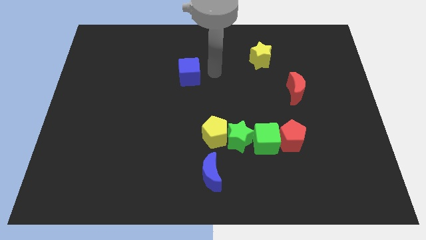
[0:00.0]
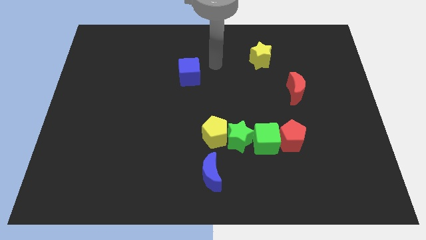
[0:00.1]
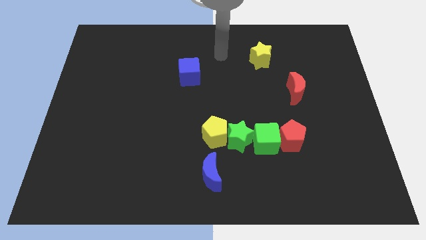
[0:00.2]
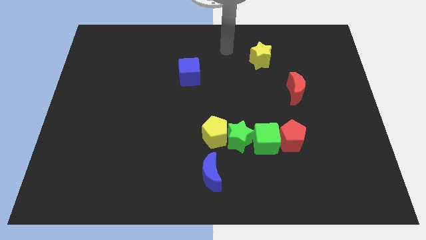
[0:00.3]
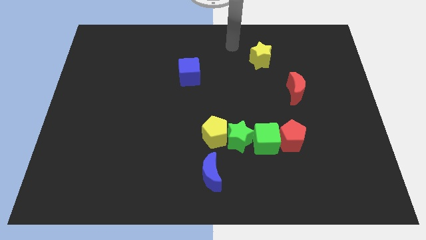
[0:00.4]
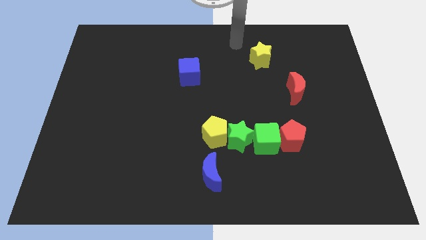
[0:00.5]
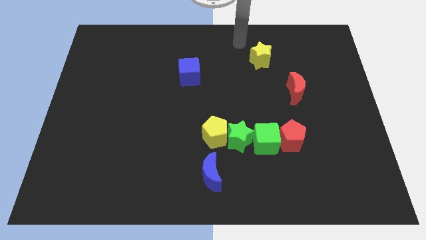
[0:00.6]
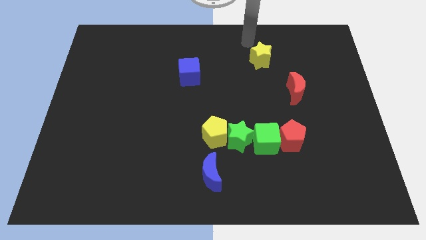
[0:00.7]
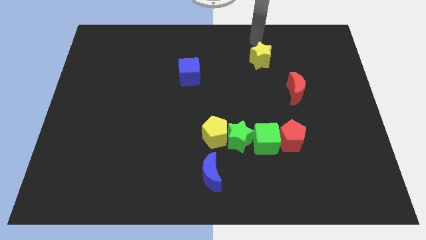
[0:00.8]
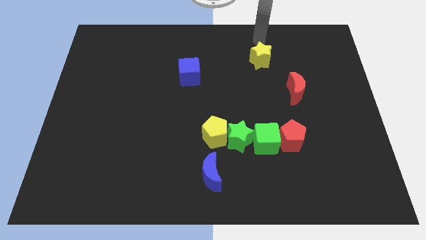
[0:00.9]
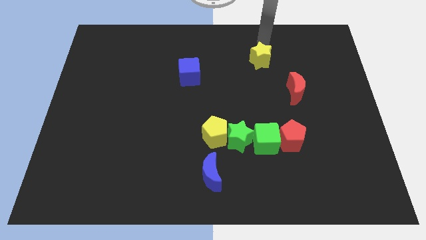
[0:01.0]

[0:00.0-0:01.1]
place the arm above the yellow star

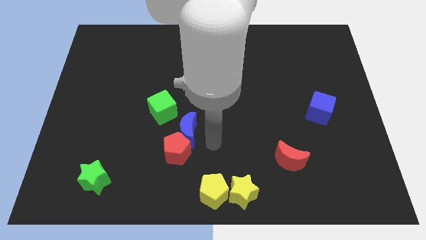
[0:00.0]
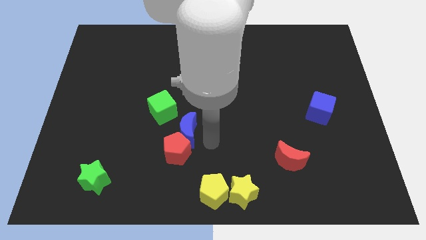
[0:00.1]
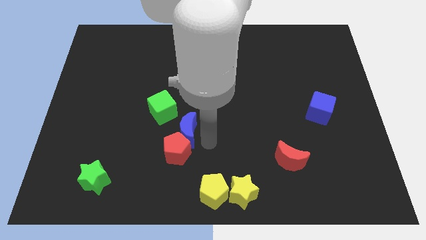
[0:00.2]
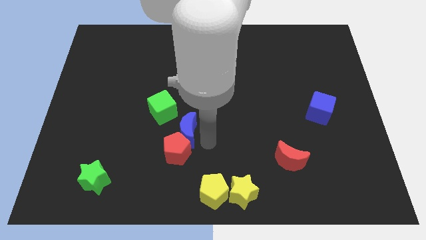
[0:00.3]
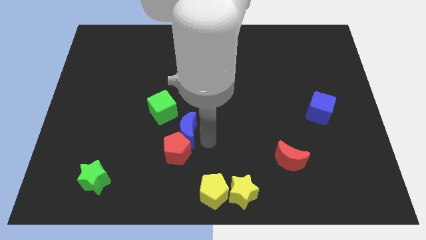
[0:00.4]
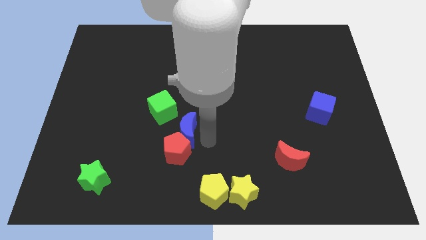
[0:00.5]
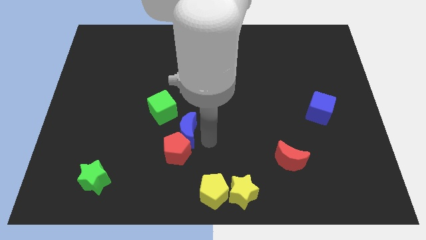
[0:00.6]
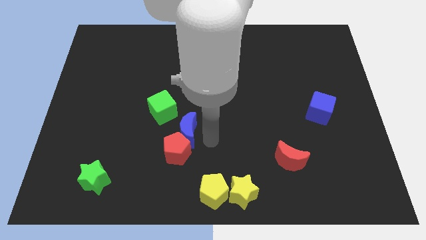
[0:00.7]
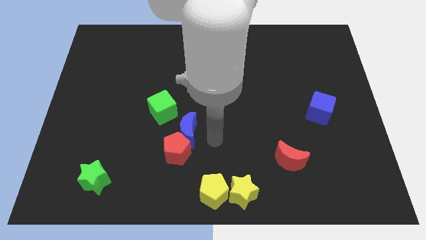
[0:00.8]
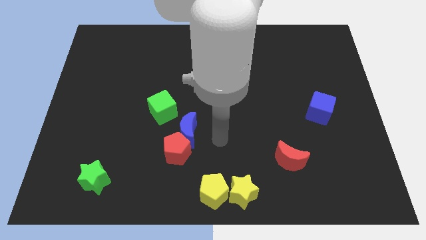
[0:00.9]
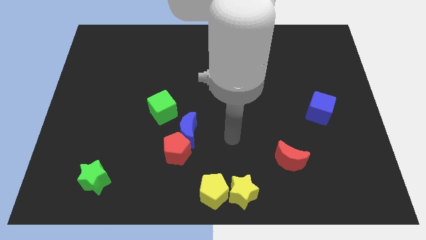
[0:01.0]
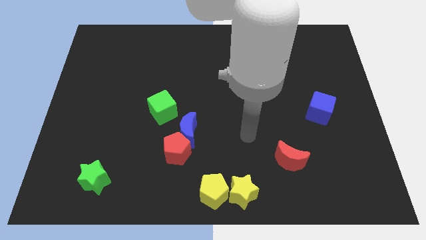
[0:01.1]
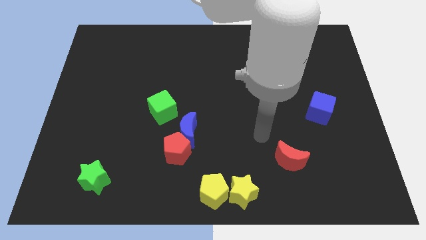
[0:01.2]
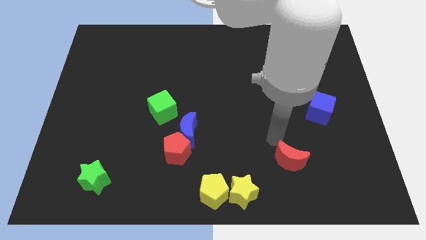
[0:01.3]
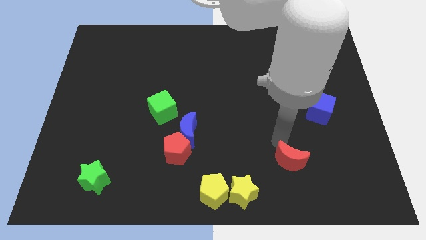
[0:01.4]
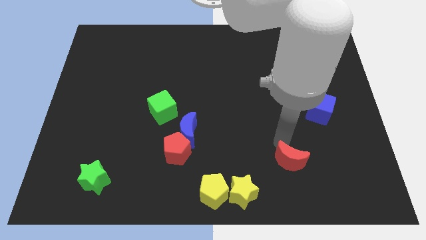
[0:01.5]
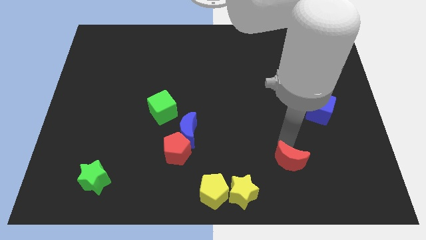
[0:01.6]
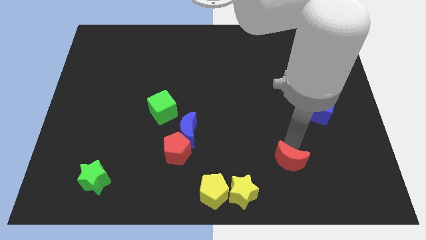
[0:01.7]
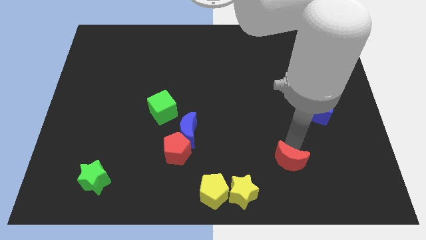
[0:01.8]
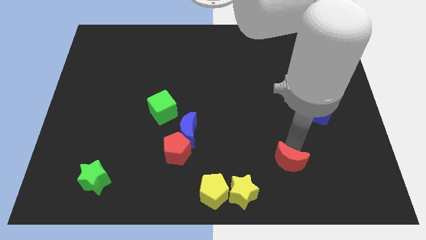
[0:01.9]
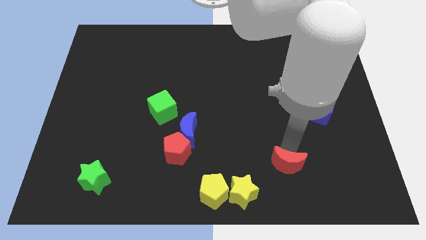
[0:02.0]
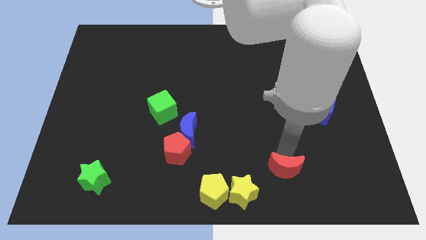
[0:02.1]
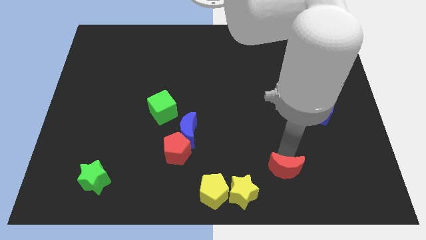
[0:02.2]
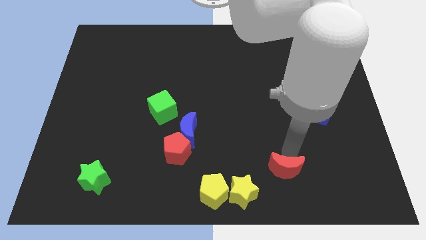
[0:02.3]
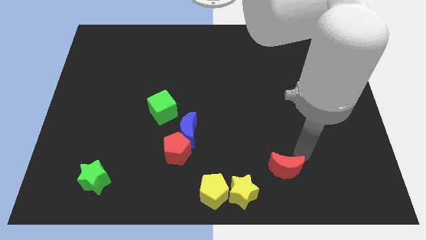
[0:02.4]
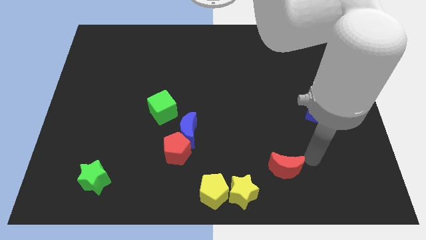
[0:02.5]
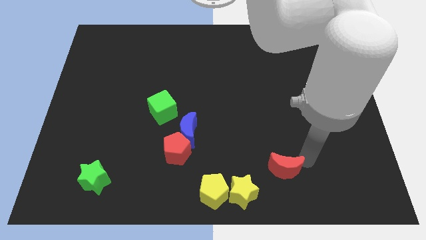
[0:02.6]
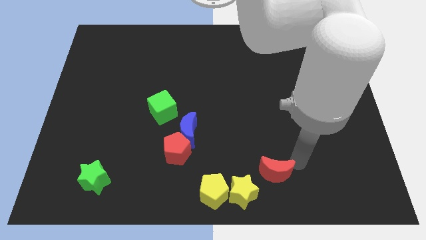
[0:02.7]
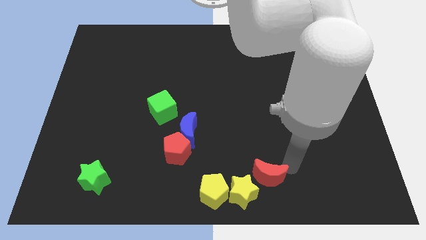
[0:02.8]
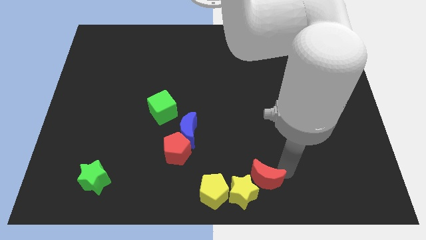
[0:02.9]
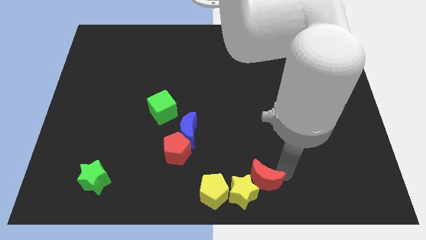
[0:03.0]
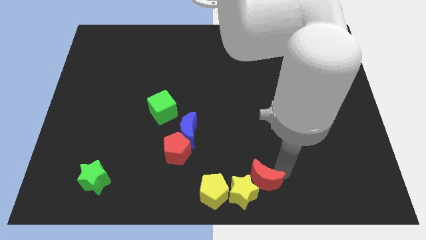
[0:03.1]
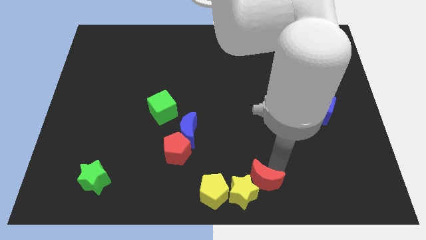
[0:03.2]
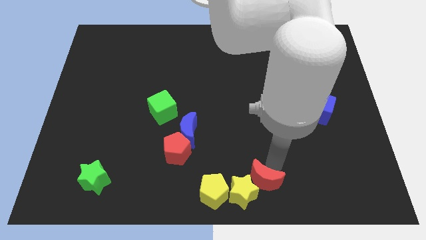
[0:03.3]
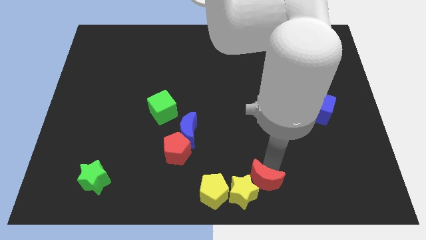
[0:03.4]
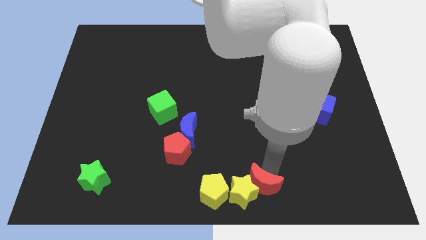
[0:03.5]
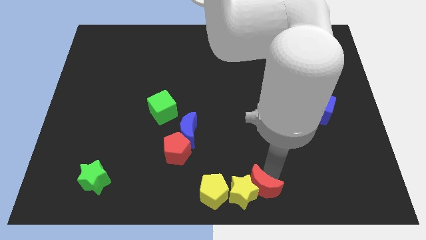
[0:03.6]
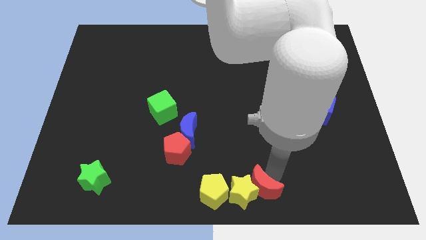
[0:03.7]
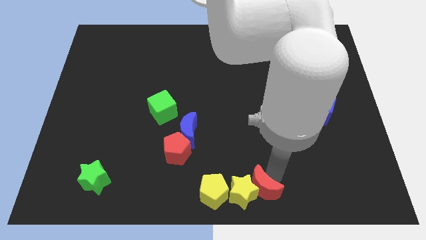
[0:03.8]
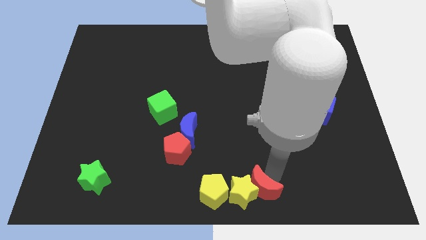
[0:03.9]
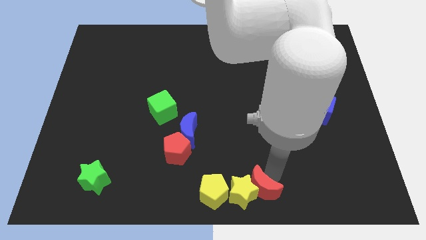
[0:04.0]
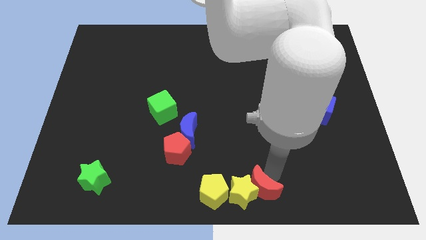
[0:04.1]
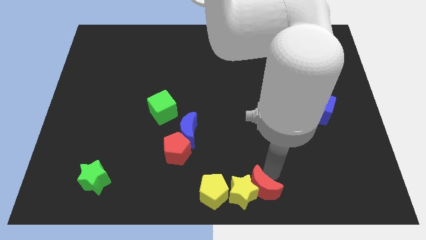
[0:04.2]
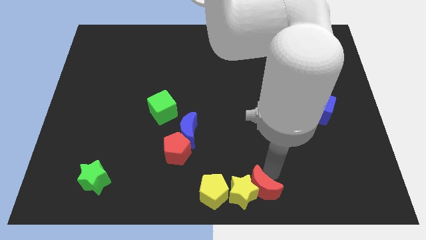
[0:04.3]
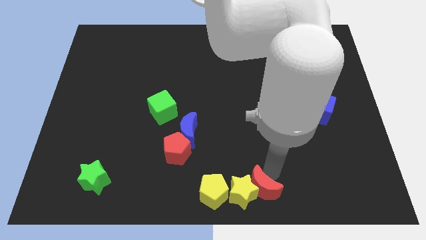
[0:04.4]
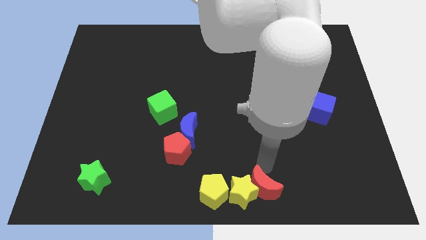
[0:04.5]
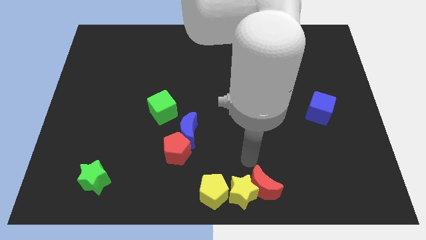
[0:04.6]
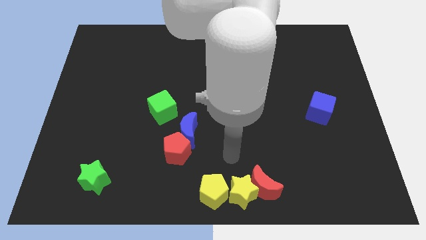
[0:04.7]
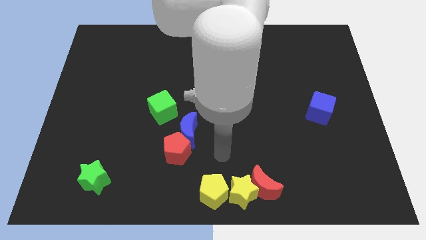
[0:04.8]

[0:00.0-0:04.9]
move the red moon into the yellow blocks

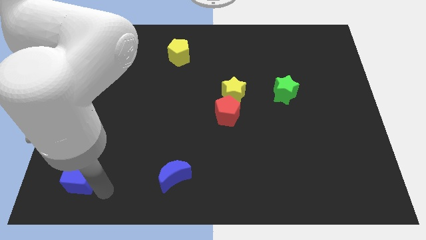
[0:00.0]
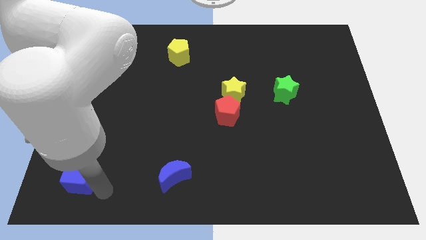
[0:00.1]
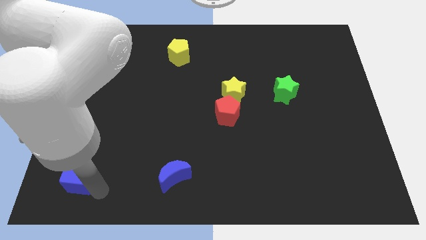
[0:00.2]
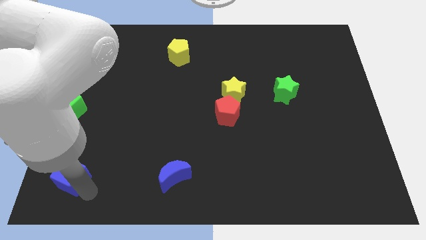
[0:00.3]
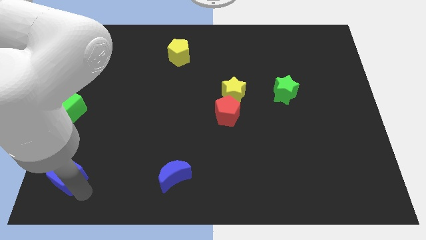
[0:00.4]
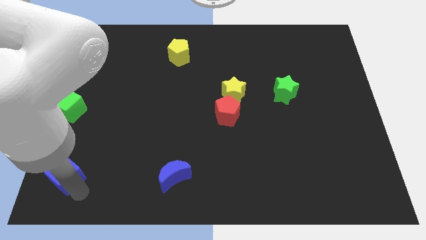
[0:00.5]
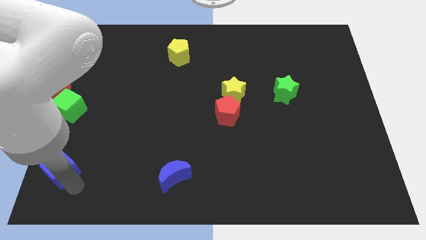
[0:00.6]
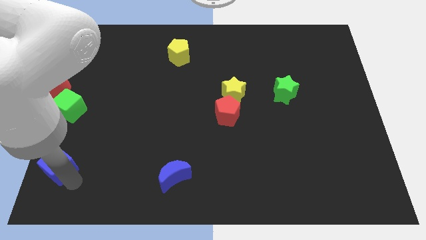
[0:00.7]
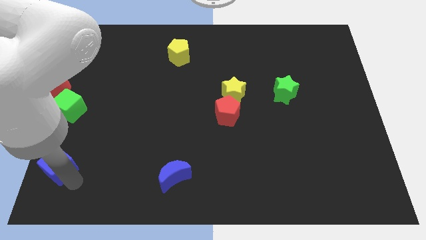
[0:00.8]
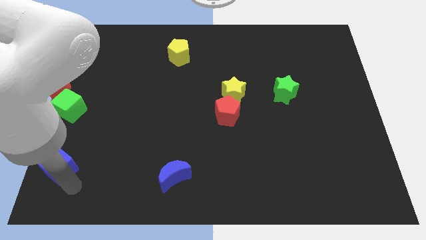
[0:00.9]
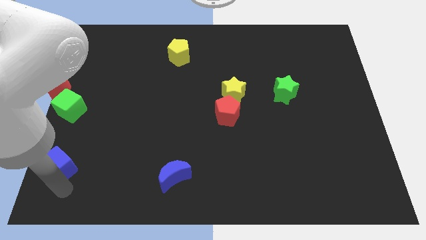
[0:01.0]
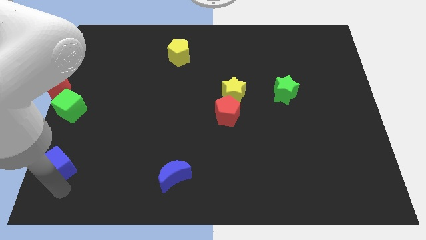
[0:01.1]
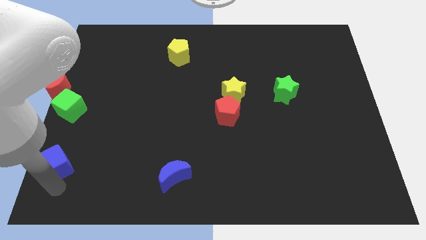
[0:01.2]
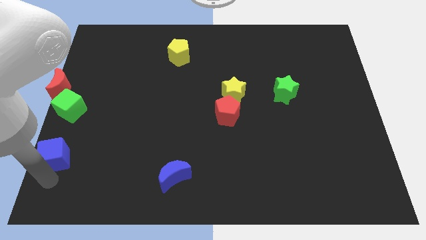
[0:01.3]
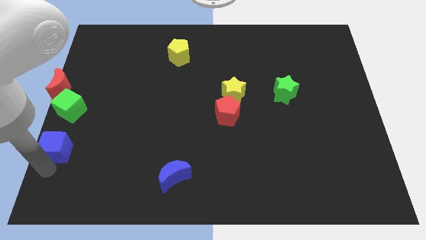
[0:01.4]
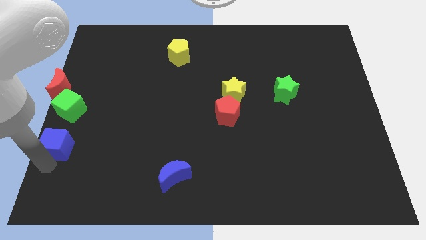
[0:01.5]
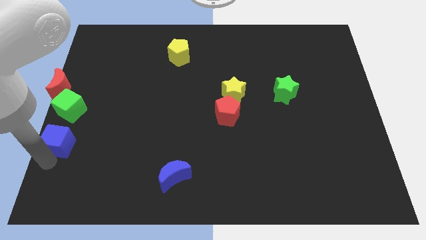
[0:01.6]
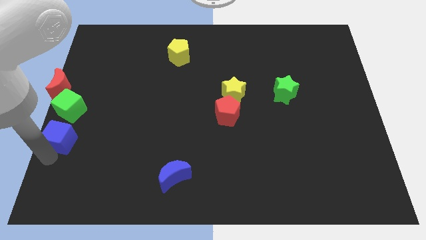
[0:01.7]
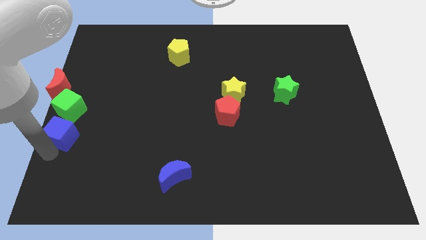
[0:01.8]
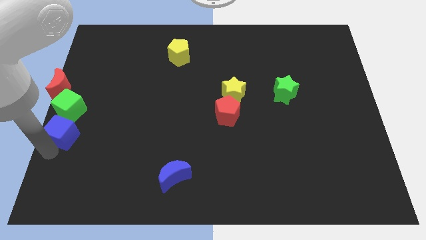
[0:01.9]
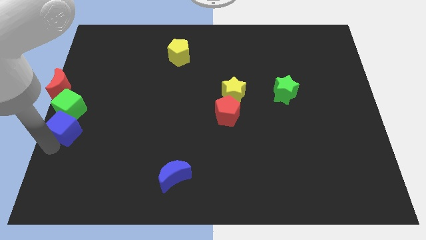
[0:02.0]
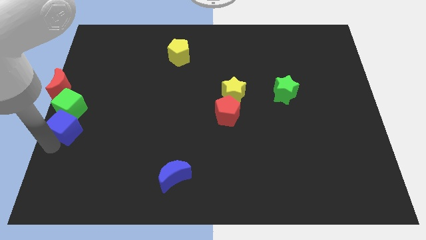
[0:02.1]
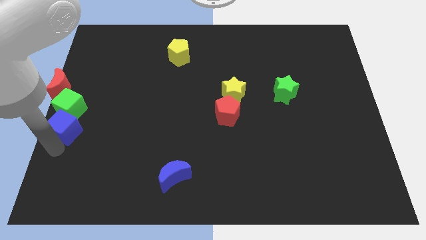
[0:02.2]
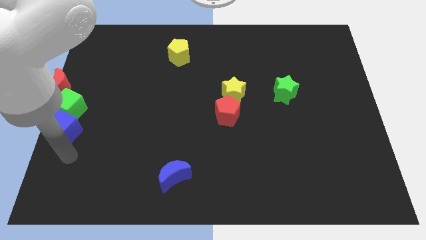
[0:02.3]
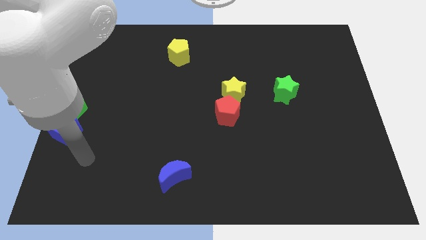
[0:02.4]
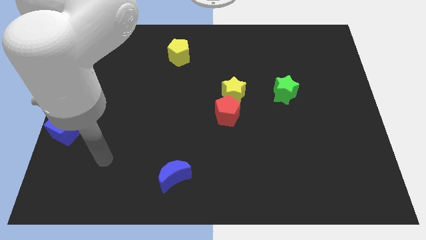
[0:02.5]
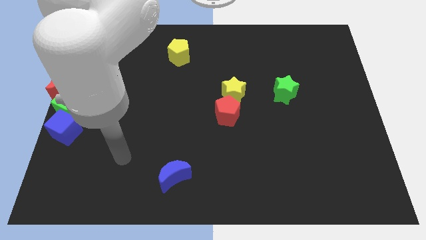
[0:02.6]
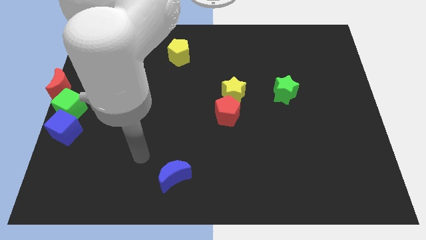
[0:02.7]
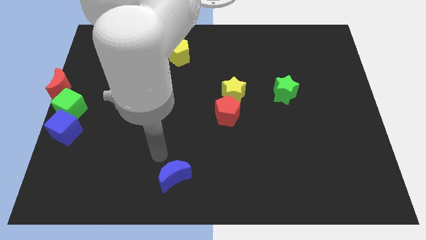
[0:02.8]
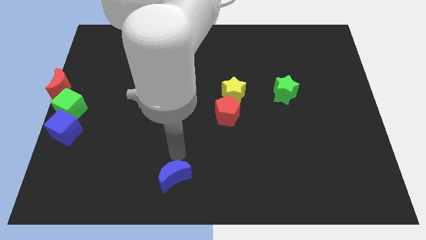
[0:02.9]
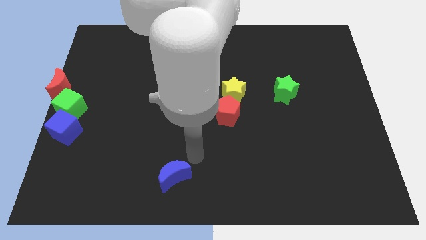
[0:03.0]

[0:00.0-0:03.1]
move blue cube into green cube
